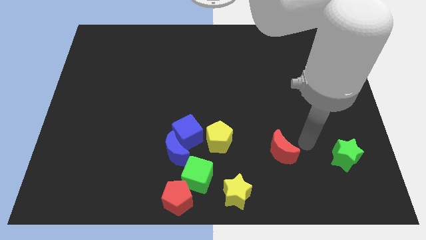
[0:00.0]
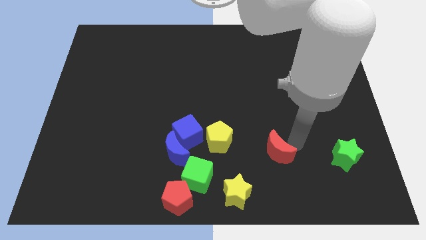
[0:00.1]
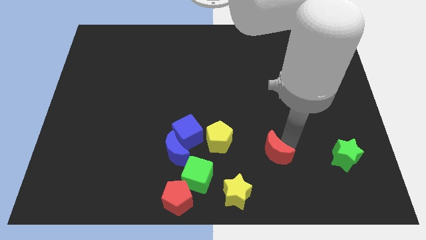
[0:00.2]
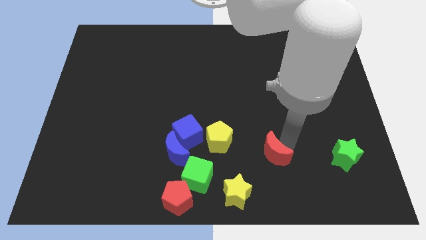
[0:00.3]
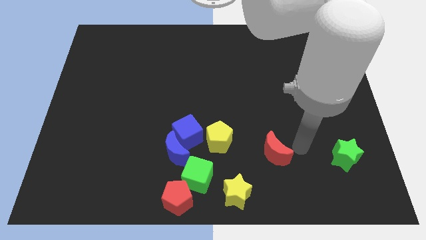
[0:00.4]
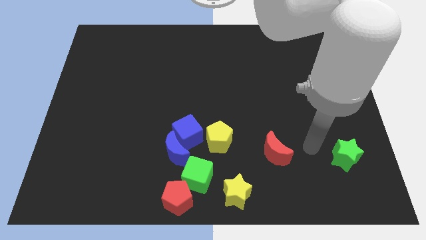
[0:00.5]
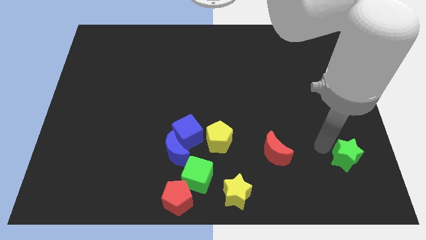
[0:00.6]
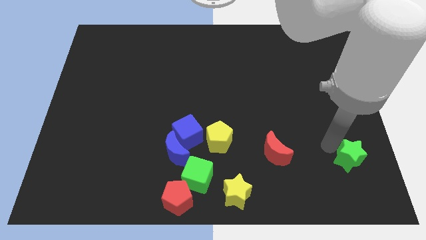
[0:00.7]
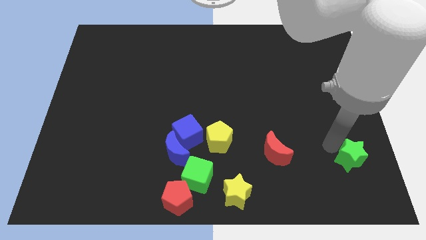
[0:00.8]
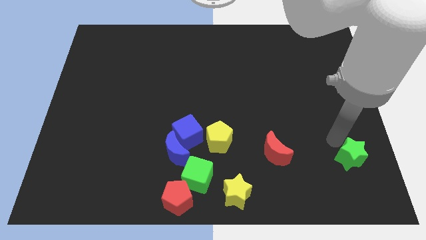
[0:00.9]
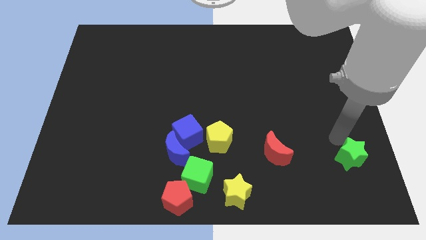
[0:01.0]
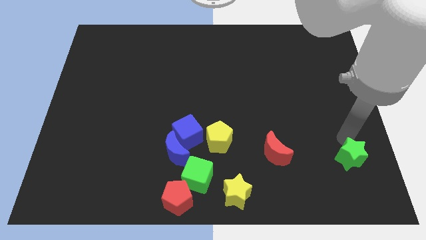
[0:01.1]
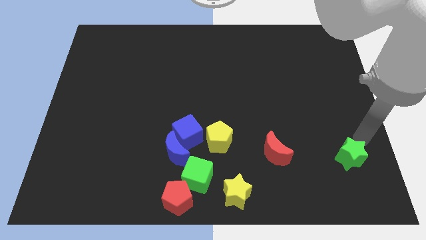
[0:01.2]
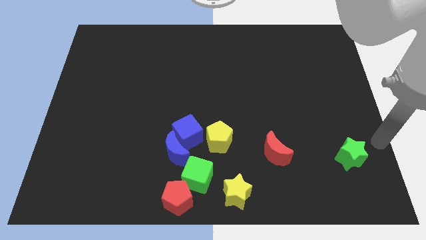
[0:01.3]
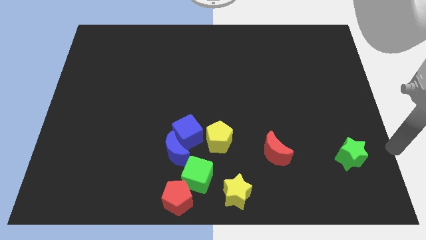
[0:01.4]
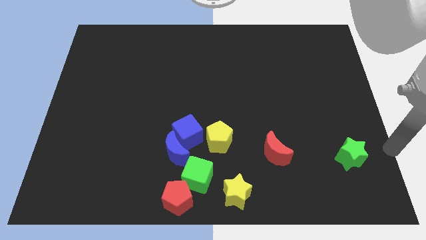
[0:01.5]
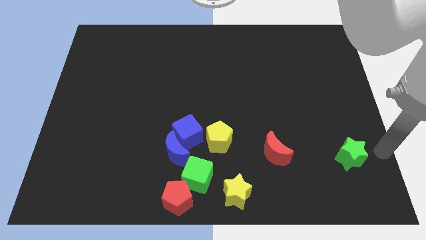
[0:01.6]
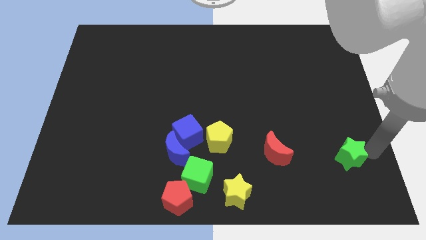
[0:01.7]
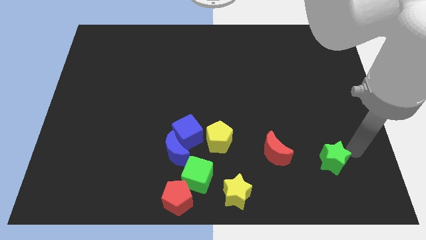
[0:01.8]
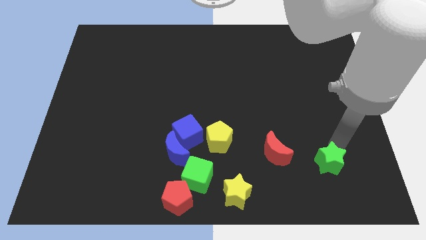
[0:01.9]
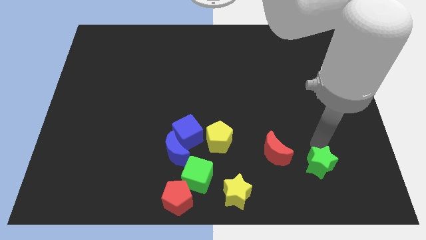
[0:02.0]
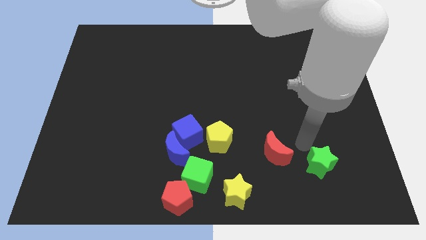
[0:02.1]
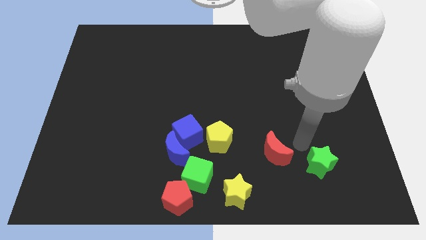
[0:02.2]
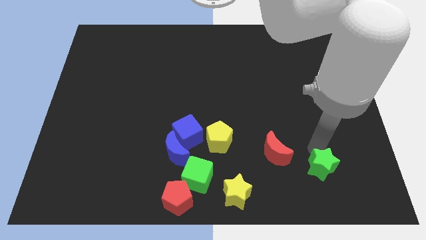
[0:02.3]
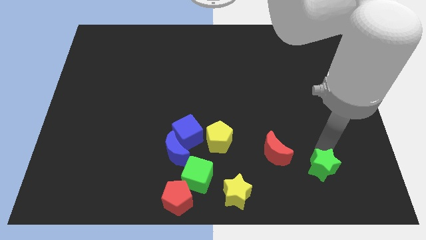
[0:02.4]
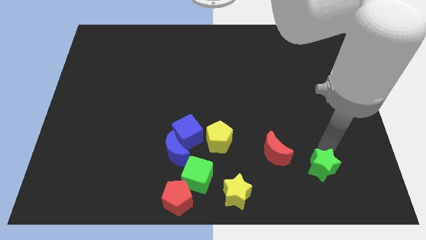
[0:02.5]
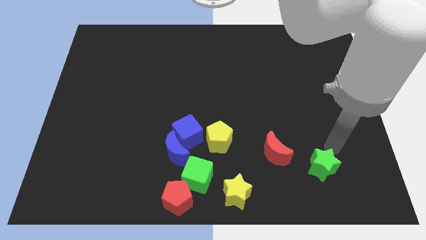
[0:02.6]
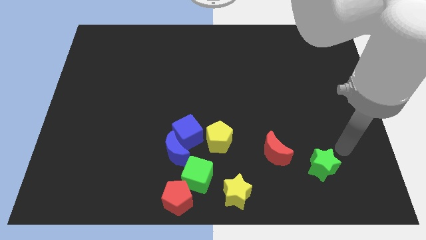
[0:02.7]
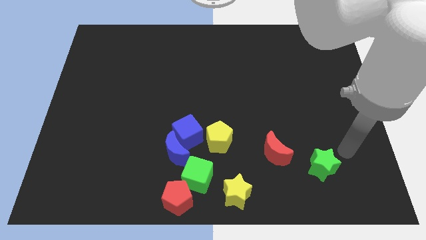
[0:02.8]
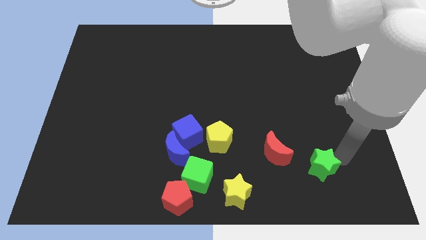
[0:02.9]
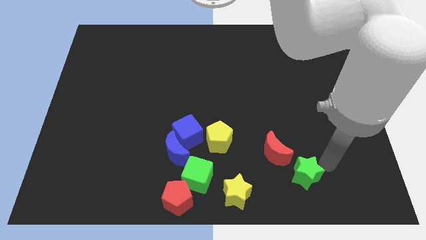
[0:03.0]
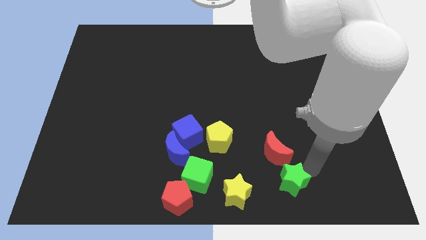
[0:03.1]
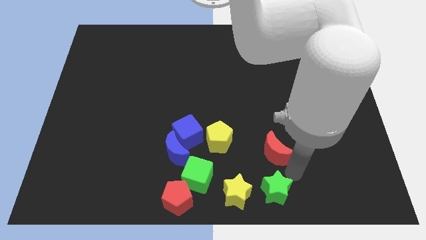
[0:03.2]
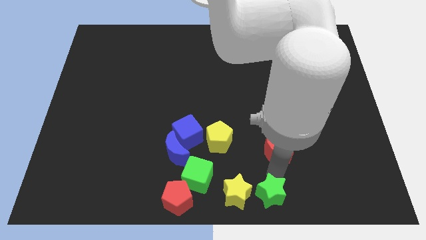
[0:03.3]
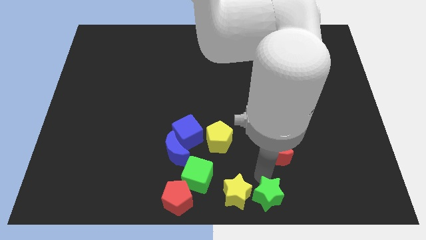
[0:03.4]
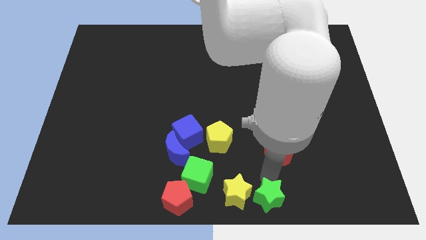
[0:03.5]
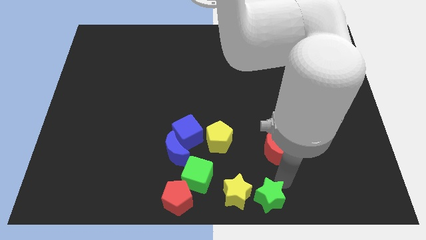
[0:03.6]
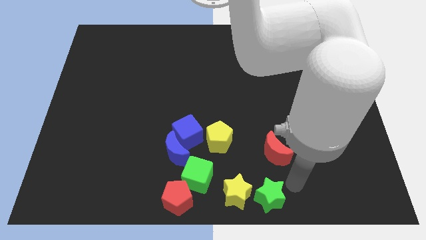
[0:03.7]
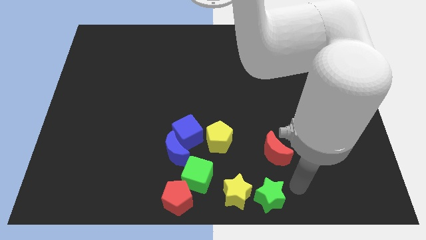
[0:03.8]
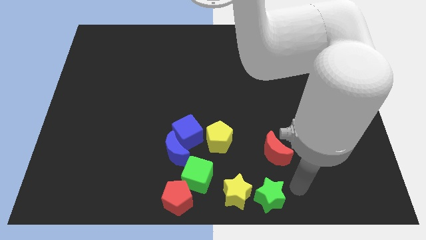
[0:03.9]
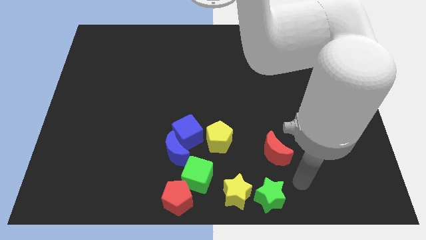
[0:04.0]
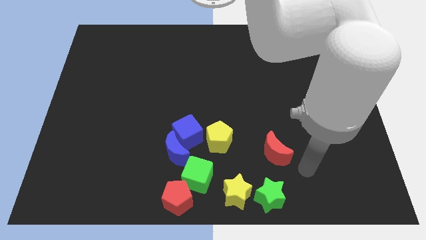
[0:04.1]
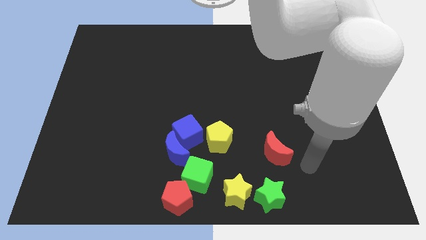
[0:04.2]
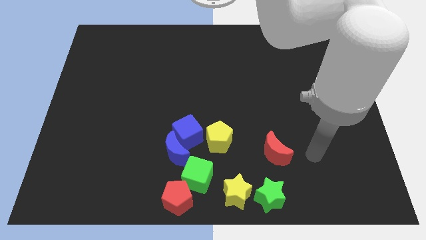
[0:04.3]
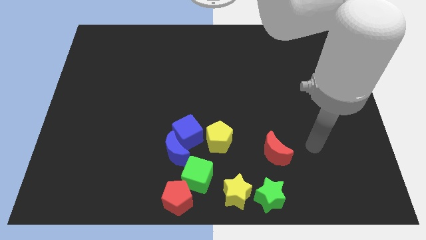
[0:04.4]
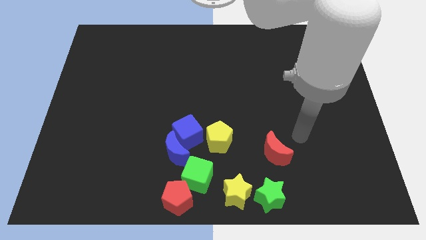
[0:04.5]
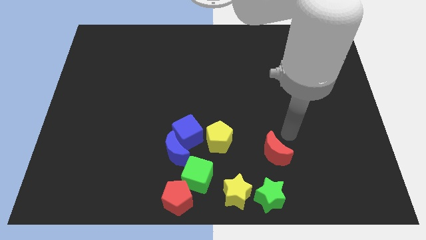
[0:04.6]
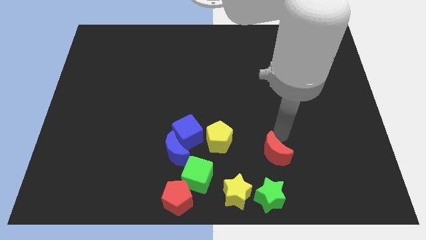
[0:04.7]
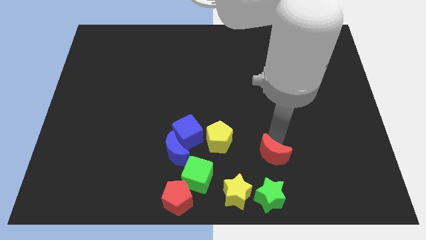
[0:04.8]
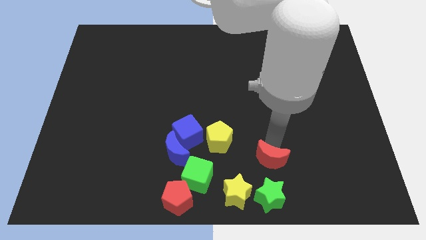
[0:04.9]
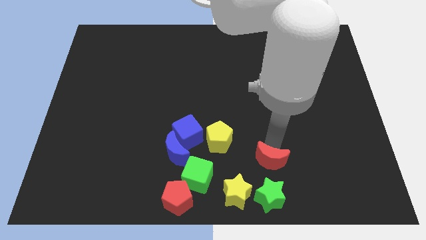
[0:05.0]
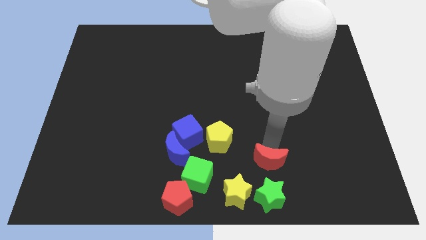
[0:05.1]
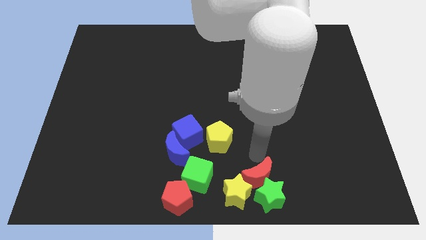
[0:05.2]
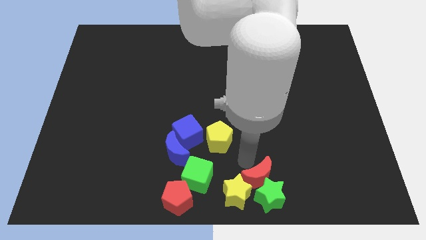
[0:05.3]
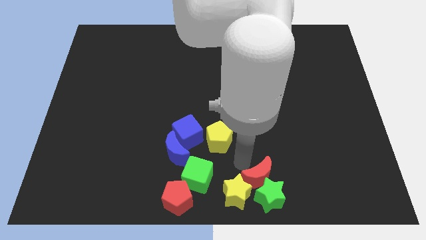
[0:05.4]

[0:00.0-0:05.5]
move the red moon to the bottom center near to the yellow star and green star

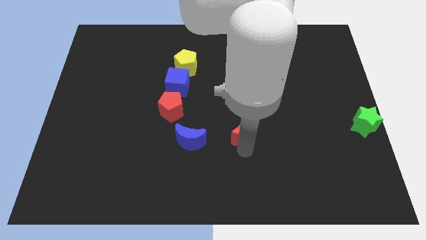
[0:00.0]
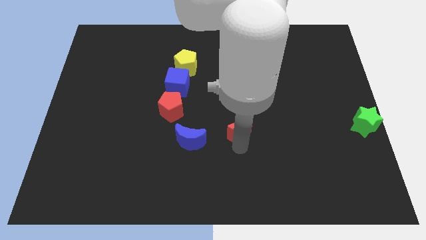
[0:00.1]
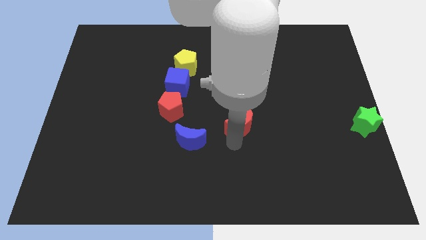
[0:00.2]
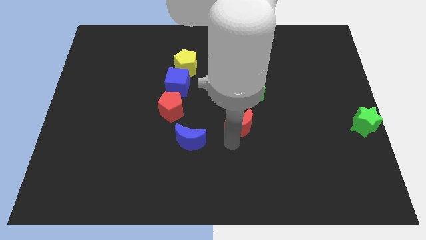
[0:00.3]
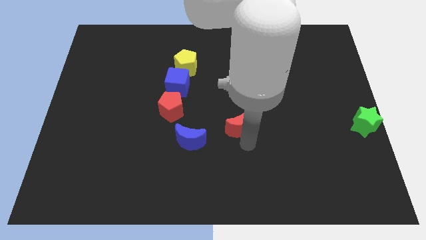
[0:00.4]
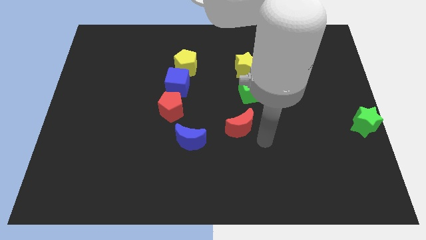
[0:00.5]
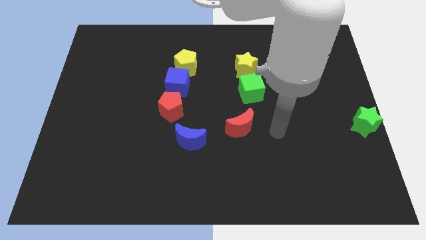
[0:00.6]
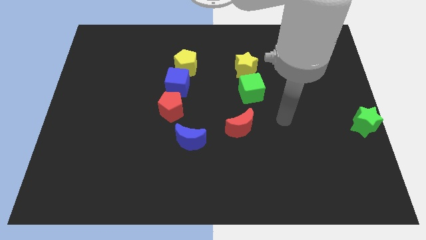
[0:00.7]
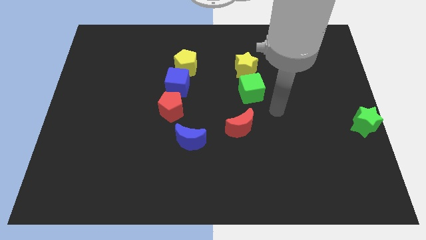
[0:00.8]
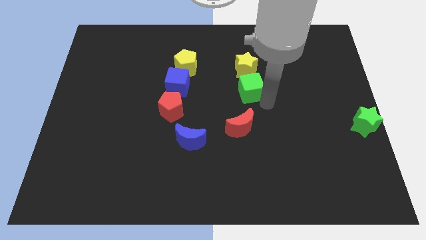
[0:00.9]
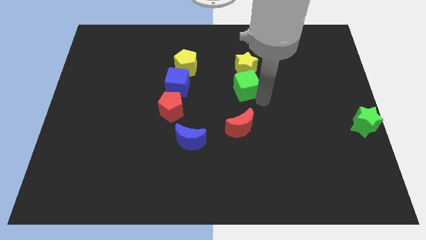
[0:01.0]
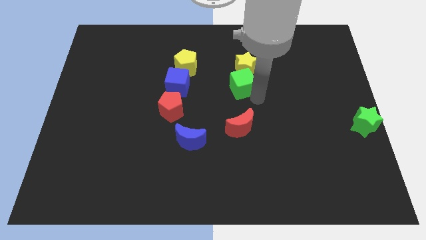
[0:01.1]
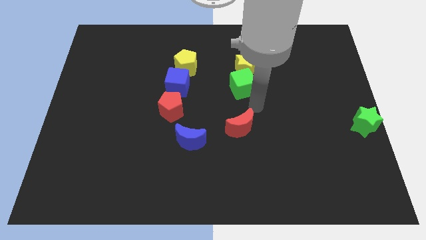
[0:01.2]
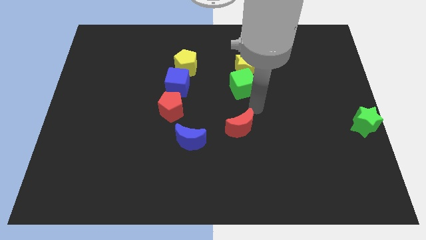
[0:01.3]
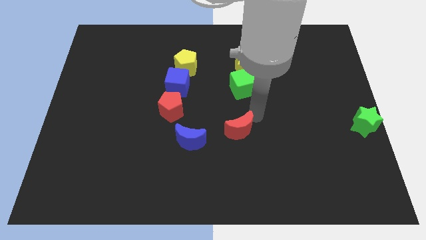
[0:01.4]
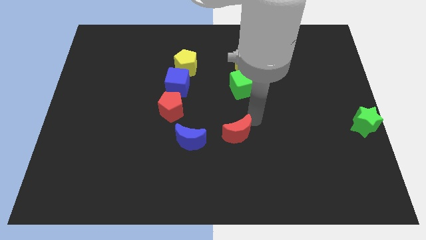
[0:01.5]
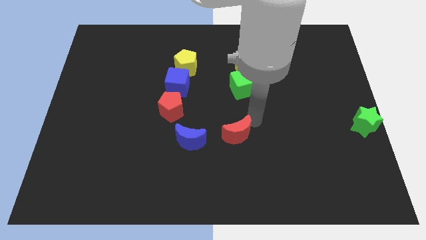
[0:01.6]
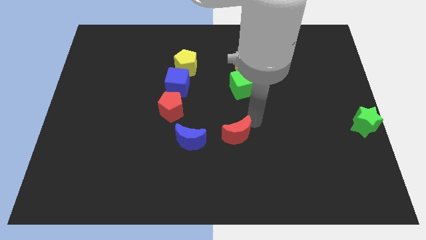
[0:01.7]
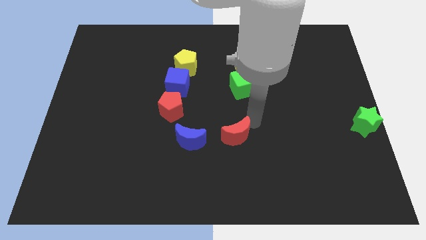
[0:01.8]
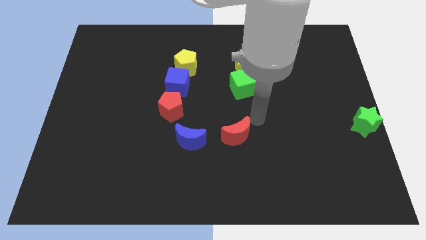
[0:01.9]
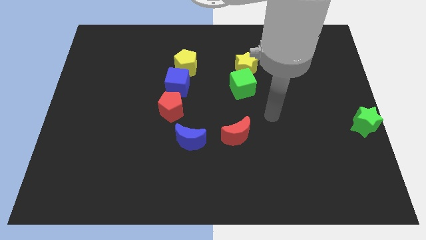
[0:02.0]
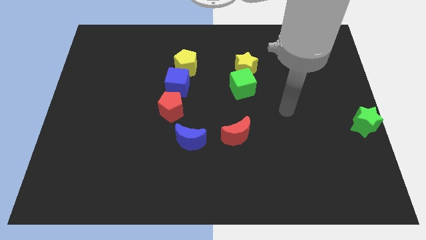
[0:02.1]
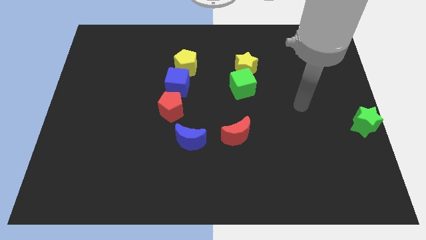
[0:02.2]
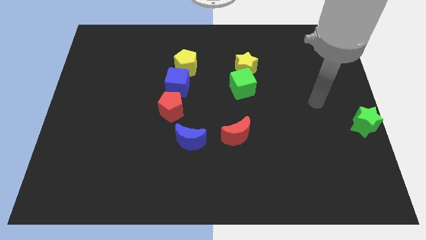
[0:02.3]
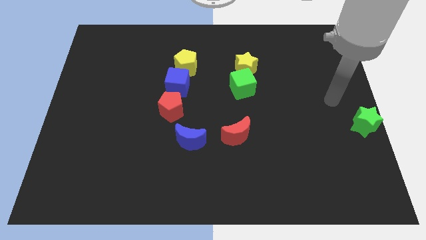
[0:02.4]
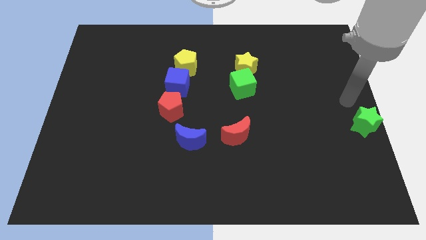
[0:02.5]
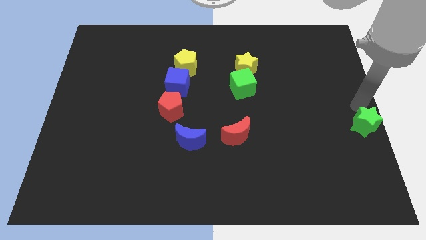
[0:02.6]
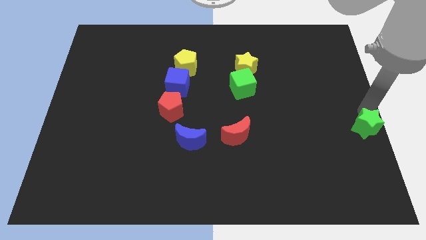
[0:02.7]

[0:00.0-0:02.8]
place the arm above the green star

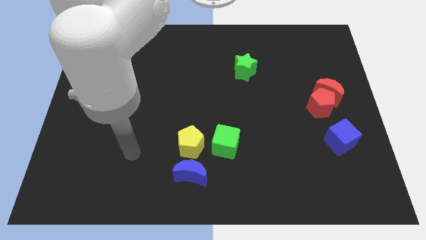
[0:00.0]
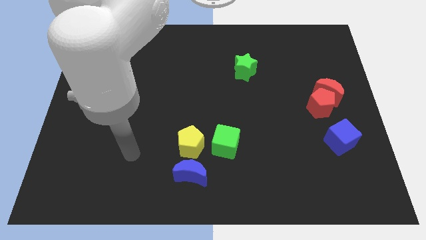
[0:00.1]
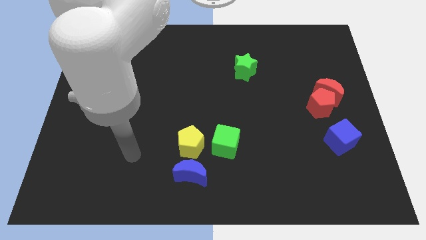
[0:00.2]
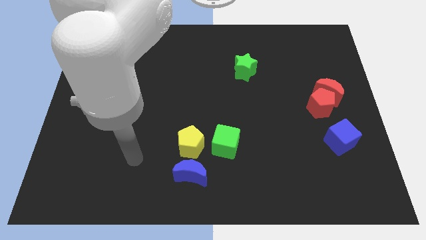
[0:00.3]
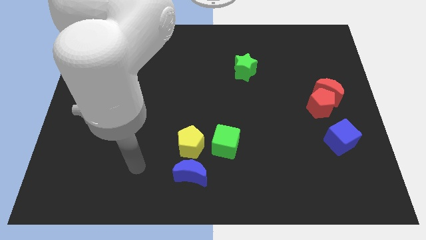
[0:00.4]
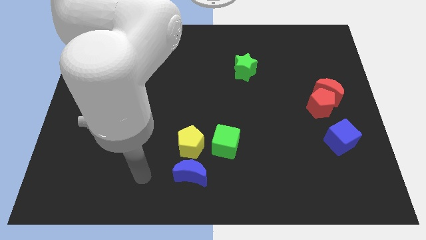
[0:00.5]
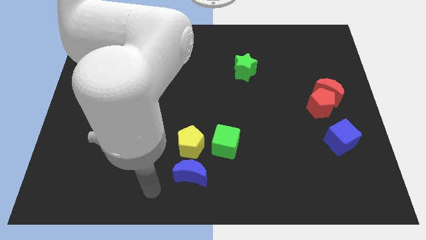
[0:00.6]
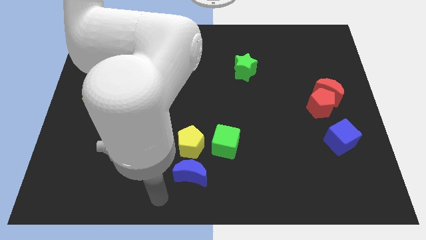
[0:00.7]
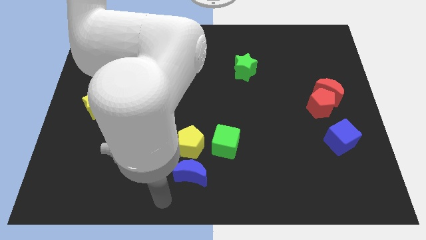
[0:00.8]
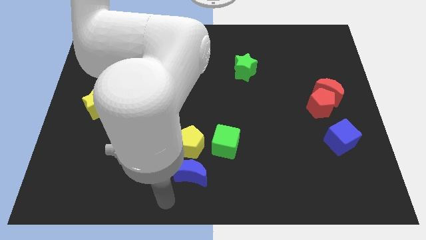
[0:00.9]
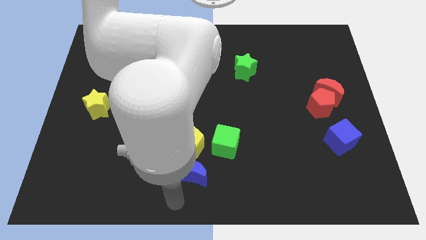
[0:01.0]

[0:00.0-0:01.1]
point your hand below the blue crescent
